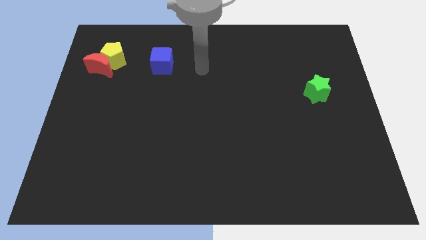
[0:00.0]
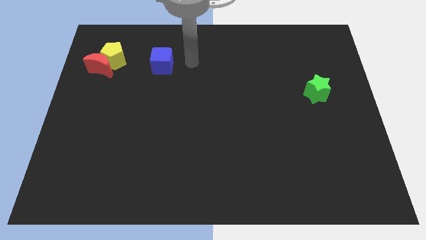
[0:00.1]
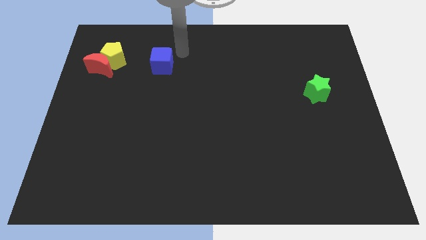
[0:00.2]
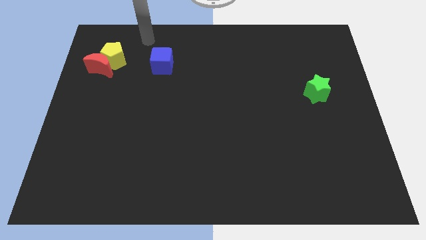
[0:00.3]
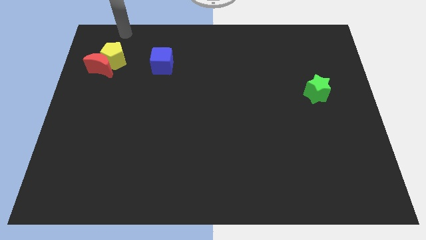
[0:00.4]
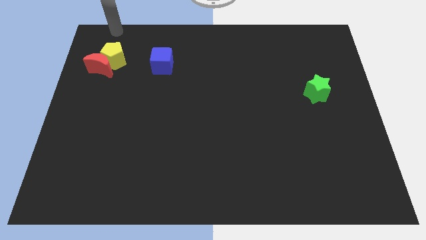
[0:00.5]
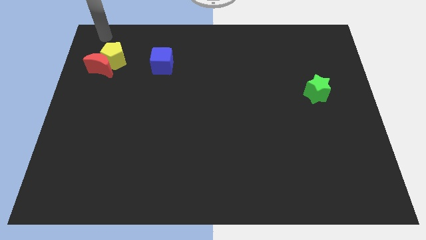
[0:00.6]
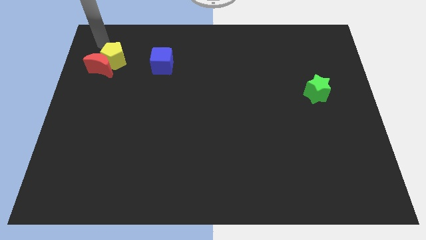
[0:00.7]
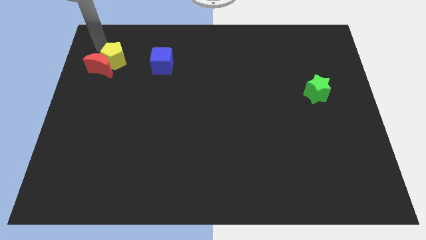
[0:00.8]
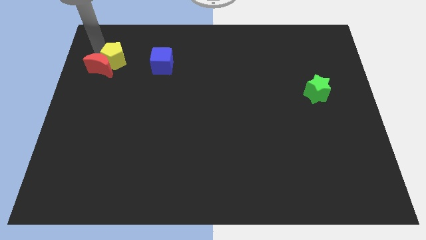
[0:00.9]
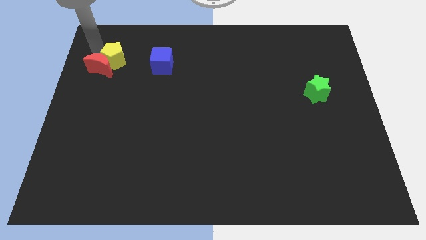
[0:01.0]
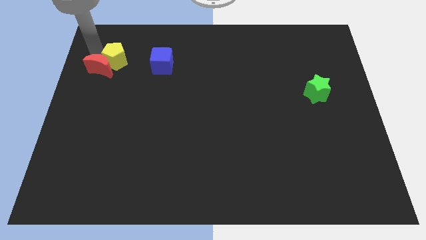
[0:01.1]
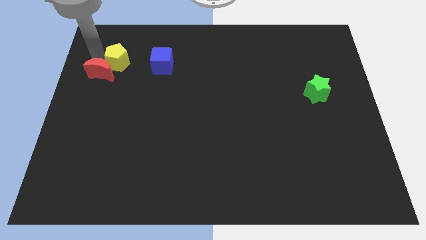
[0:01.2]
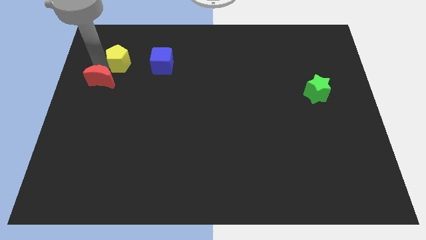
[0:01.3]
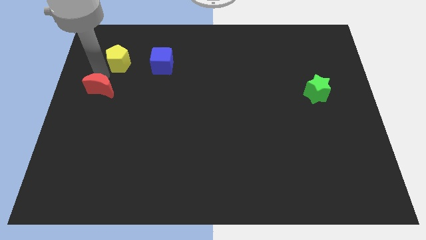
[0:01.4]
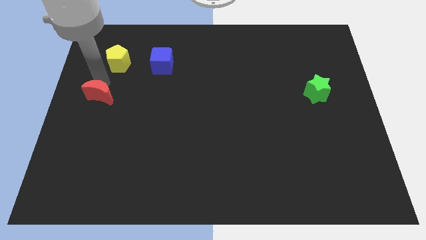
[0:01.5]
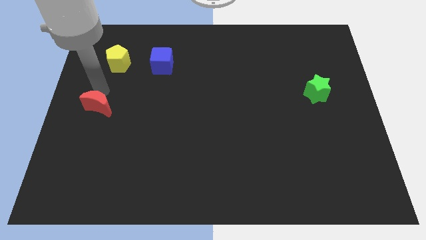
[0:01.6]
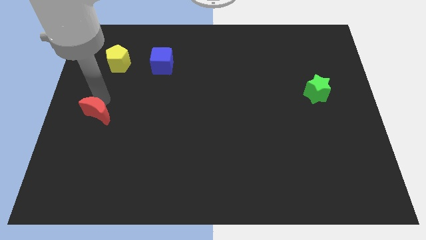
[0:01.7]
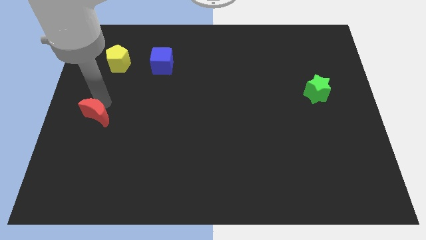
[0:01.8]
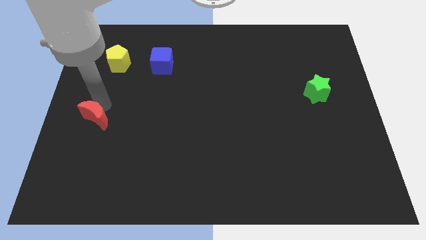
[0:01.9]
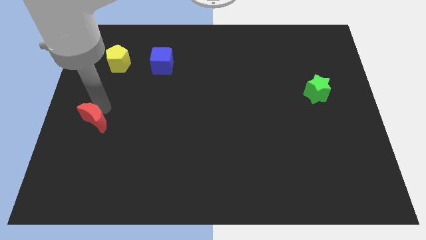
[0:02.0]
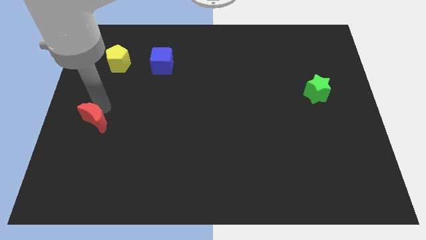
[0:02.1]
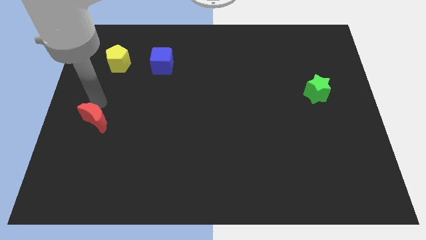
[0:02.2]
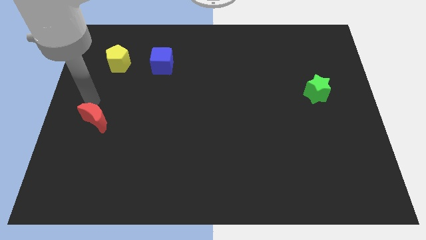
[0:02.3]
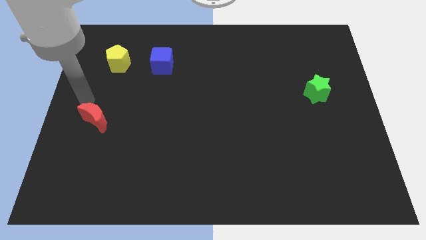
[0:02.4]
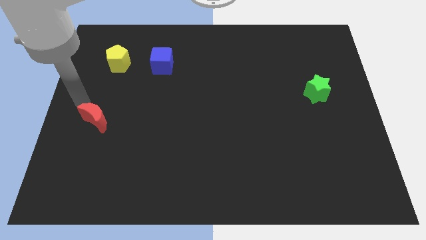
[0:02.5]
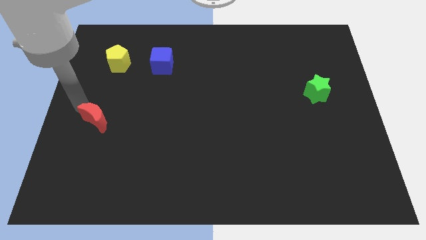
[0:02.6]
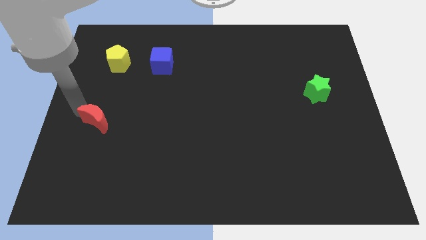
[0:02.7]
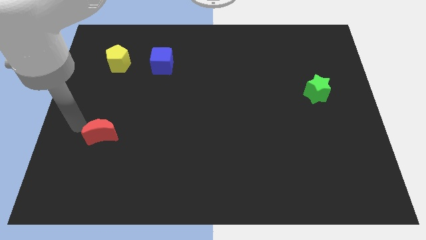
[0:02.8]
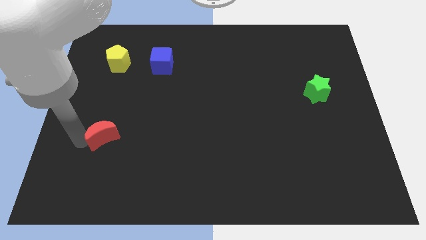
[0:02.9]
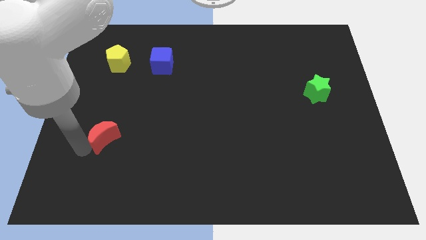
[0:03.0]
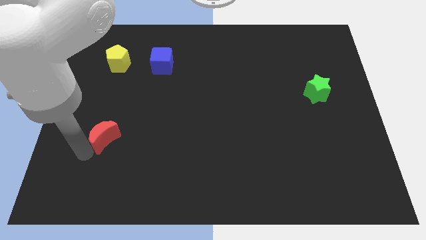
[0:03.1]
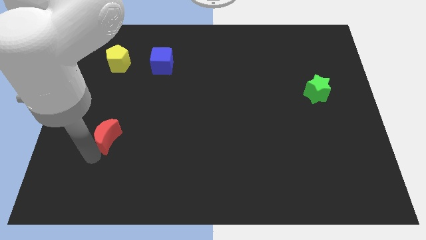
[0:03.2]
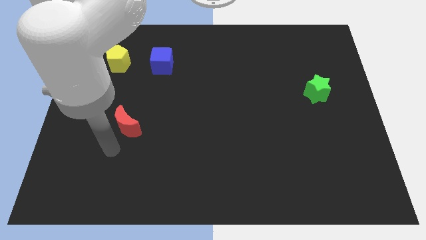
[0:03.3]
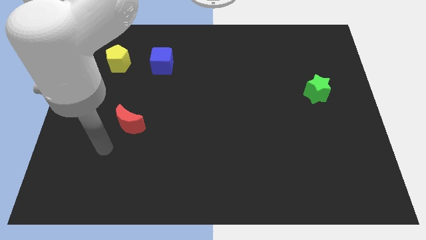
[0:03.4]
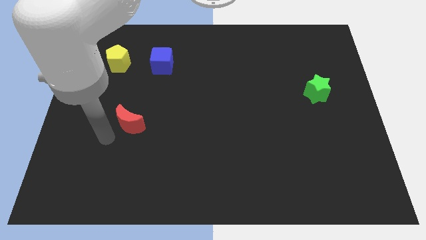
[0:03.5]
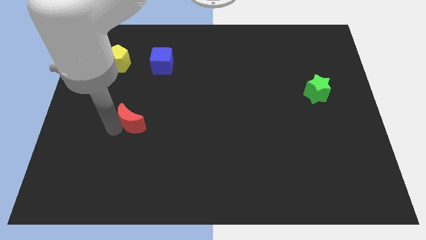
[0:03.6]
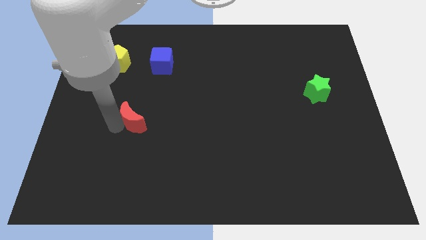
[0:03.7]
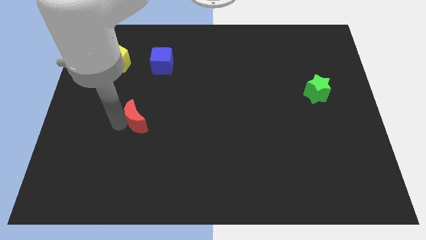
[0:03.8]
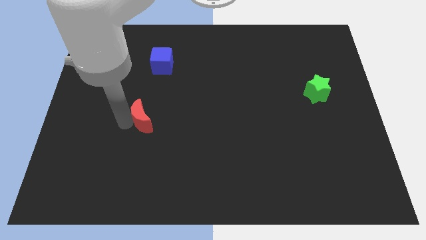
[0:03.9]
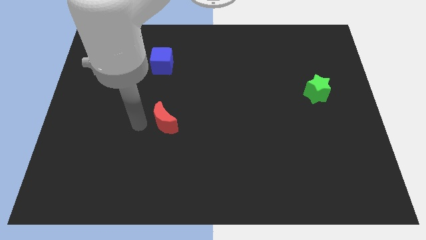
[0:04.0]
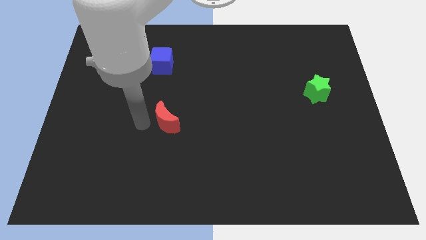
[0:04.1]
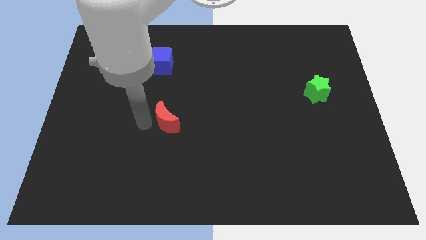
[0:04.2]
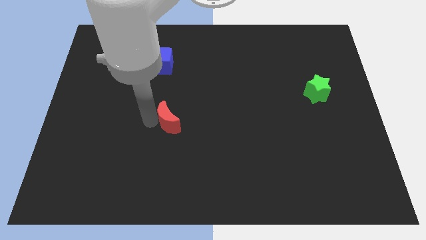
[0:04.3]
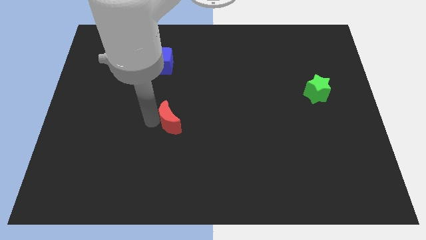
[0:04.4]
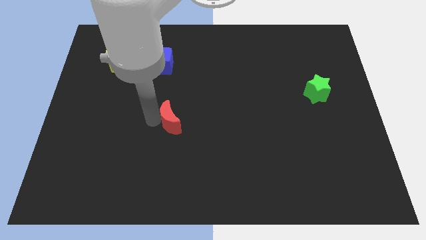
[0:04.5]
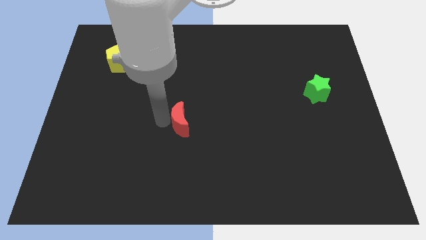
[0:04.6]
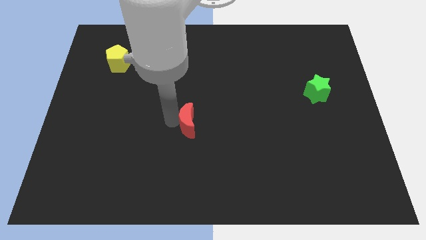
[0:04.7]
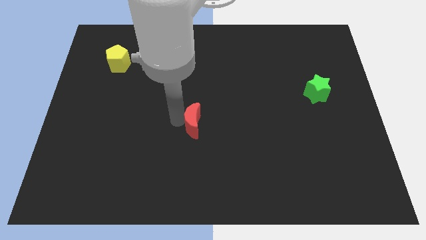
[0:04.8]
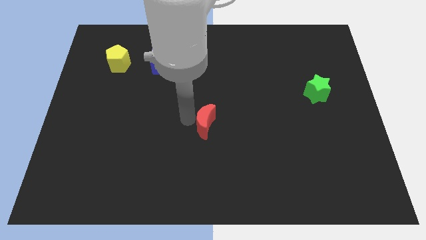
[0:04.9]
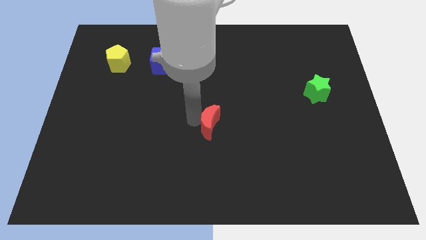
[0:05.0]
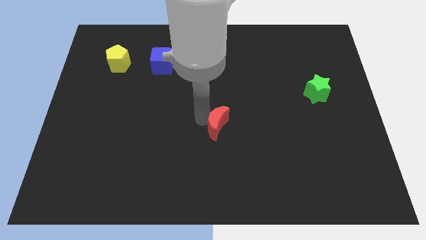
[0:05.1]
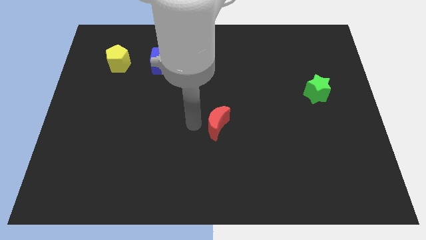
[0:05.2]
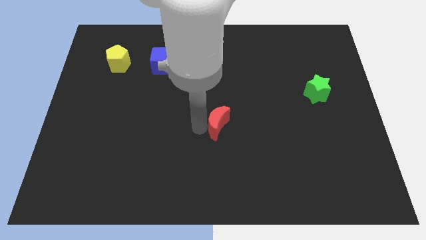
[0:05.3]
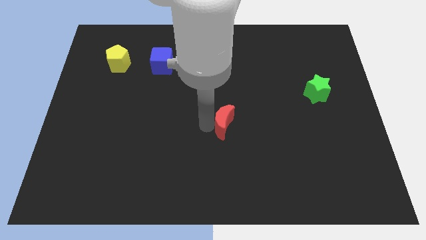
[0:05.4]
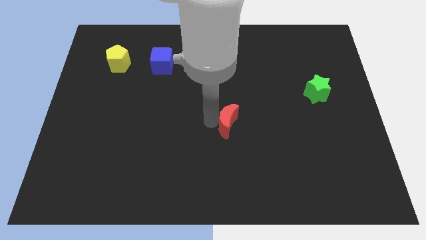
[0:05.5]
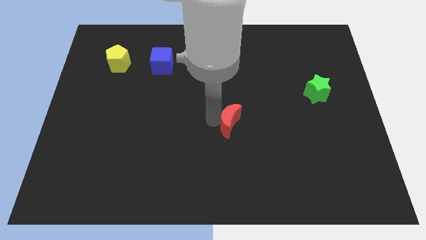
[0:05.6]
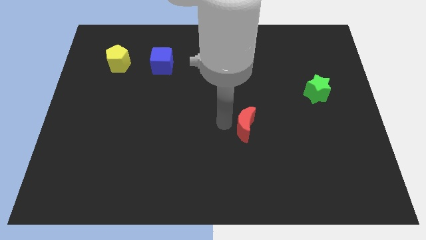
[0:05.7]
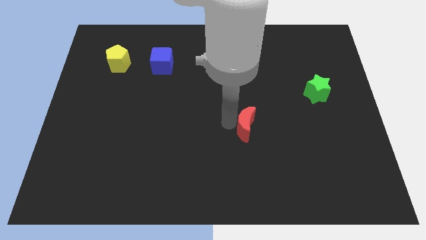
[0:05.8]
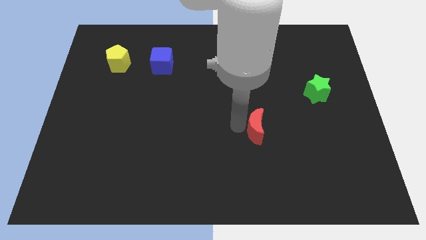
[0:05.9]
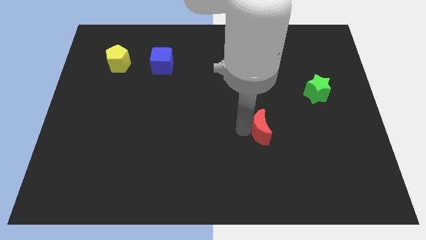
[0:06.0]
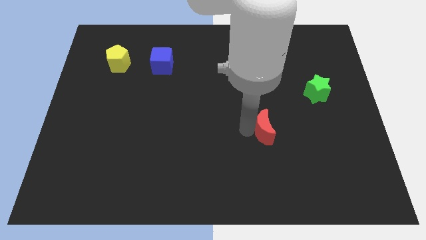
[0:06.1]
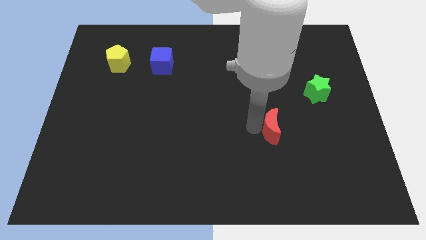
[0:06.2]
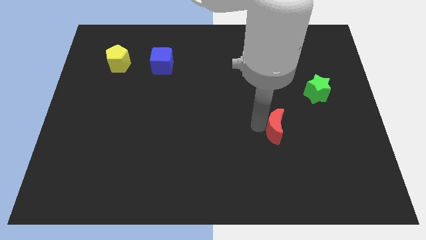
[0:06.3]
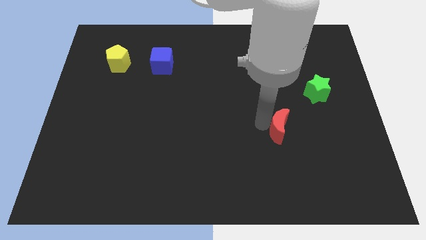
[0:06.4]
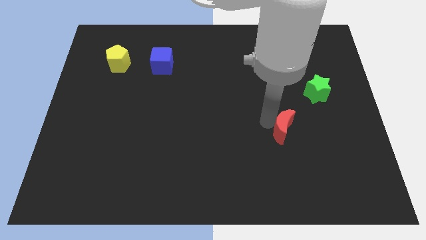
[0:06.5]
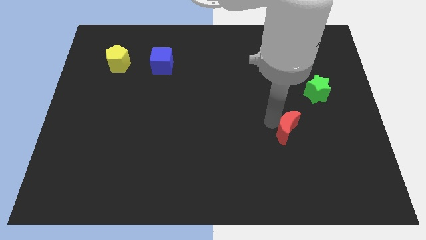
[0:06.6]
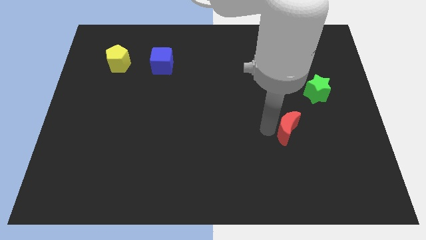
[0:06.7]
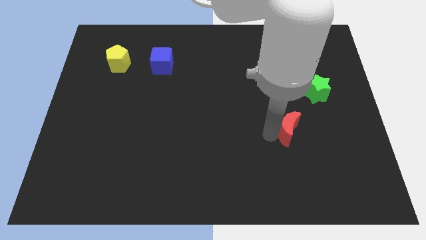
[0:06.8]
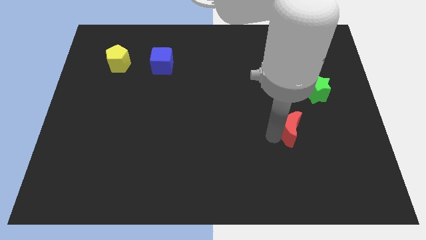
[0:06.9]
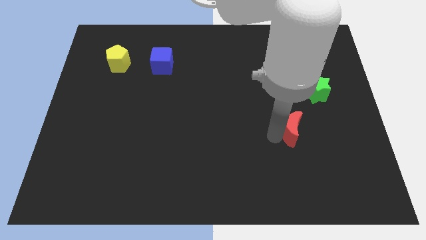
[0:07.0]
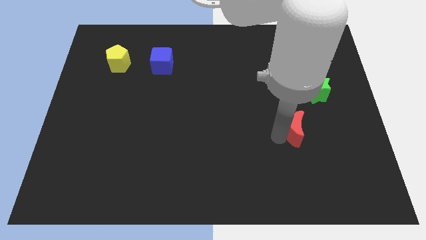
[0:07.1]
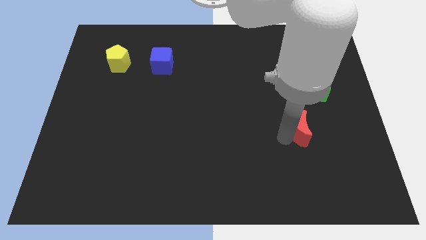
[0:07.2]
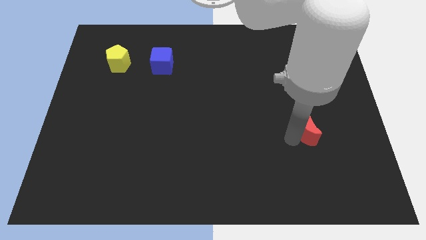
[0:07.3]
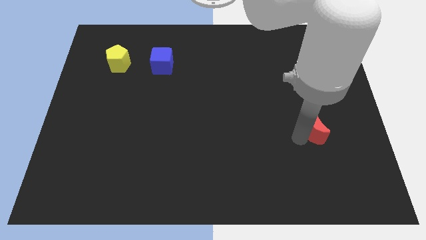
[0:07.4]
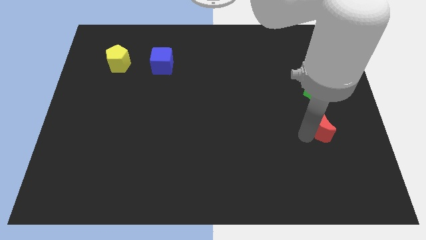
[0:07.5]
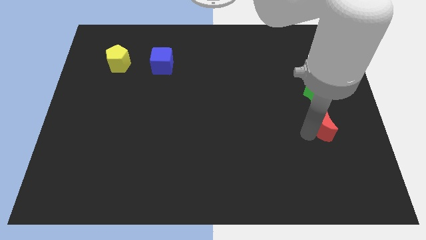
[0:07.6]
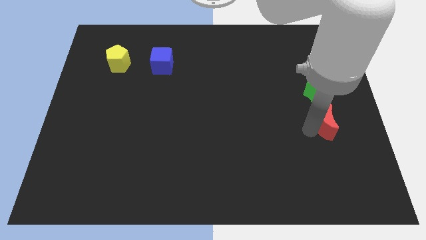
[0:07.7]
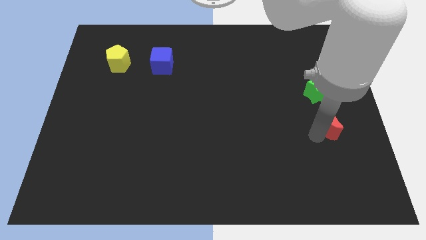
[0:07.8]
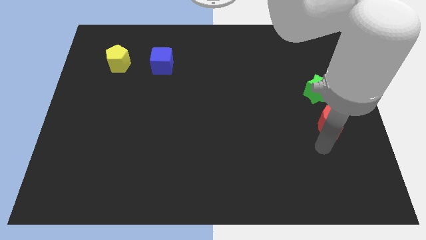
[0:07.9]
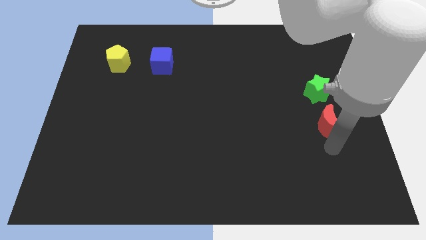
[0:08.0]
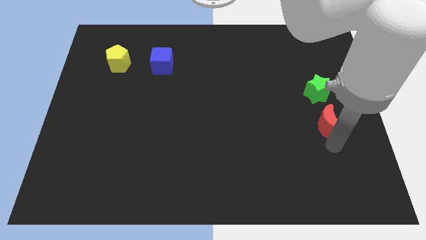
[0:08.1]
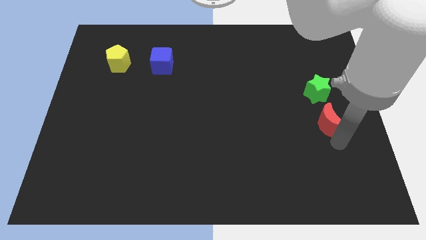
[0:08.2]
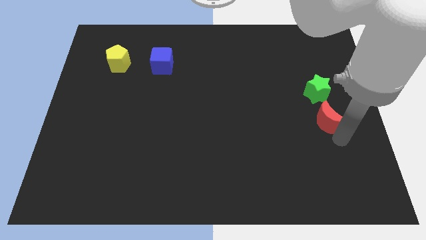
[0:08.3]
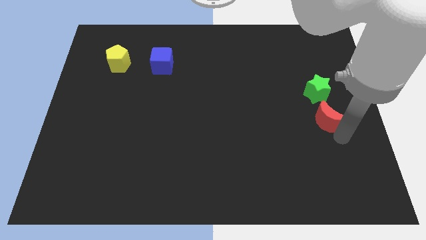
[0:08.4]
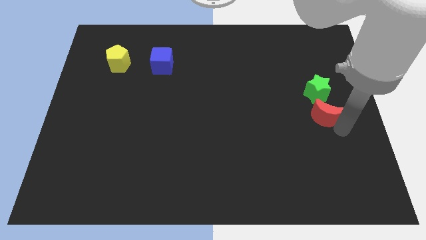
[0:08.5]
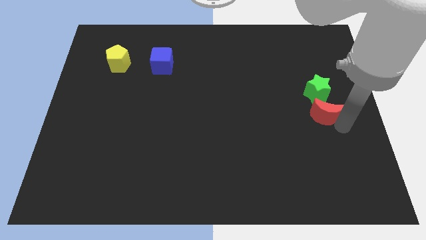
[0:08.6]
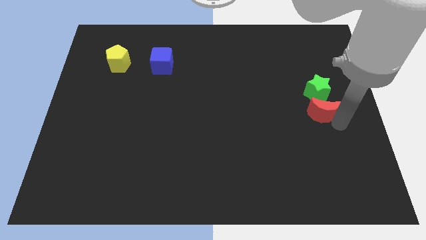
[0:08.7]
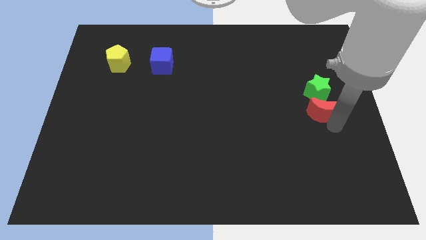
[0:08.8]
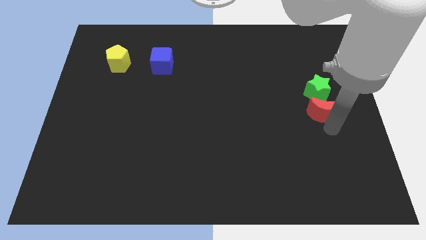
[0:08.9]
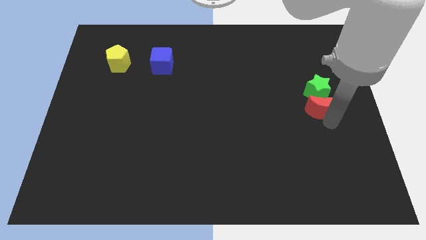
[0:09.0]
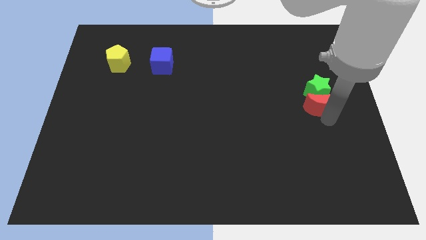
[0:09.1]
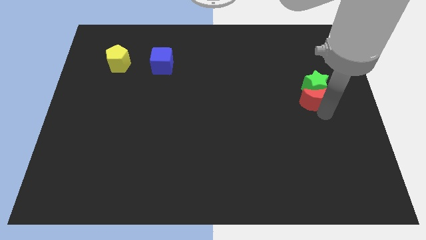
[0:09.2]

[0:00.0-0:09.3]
slide the red block to the star
